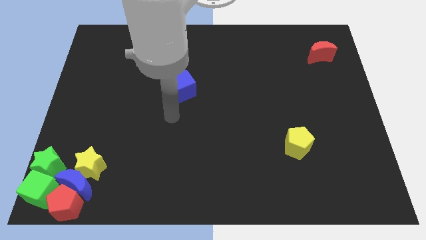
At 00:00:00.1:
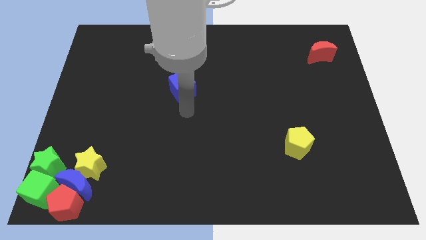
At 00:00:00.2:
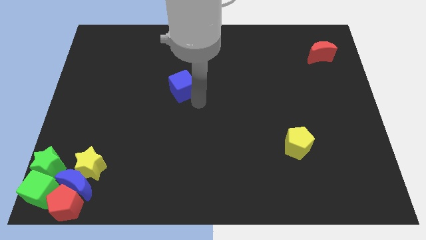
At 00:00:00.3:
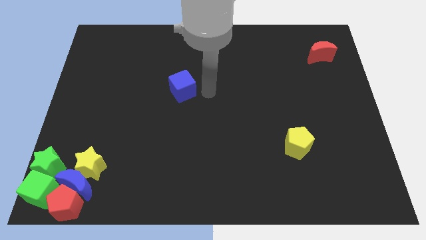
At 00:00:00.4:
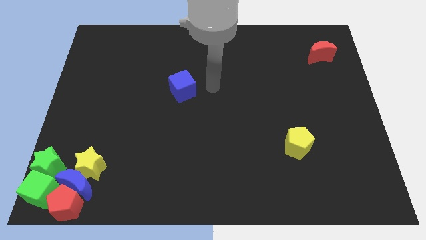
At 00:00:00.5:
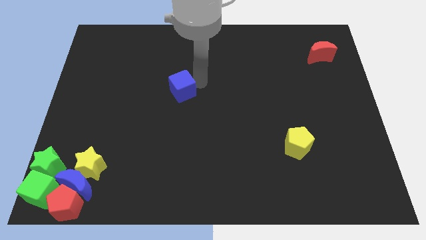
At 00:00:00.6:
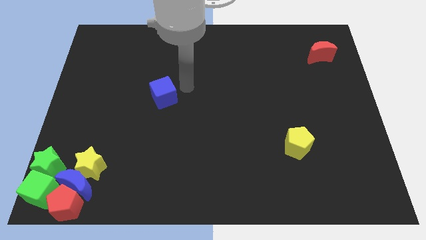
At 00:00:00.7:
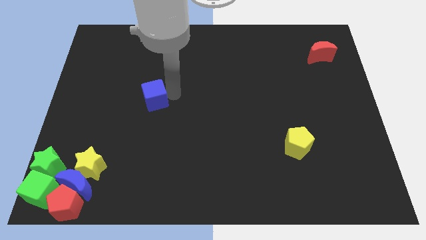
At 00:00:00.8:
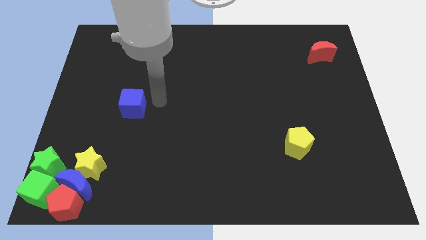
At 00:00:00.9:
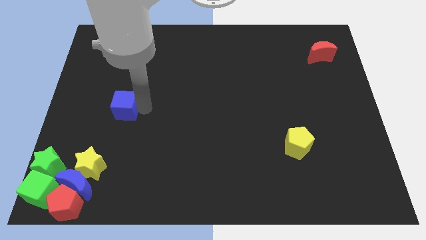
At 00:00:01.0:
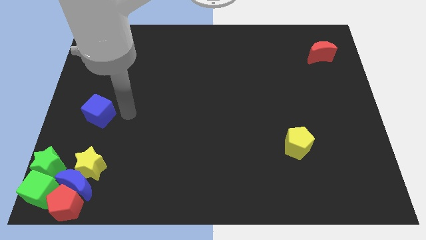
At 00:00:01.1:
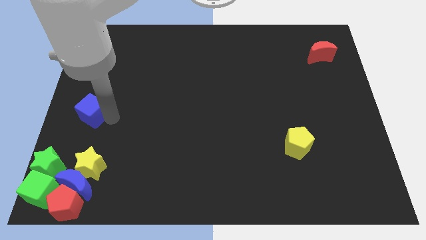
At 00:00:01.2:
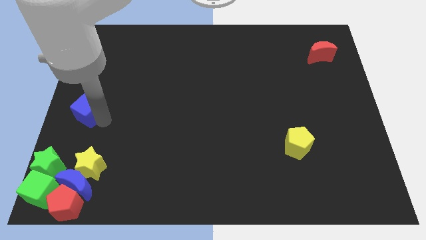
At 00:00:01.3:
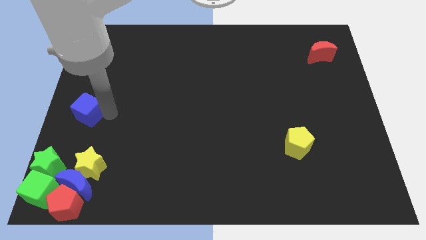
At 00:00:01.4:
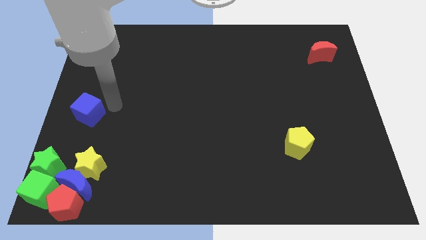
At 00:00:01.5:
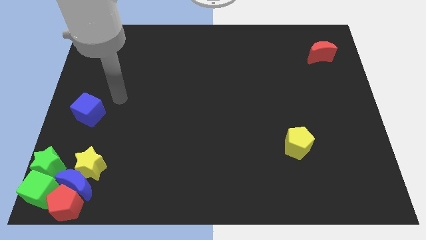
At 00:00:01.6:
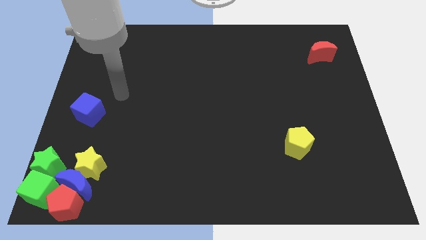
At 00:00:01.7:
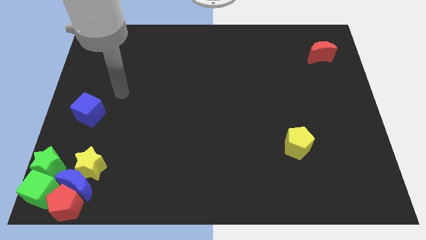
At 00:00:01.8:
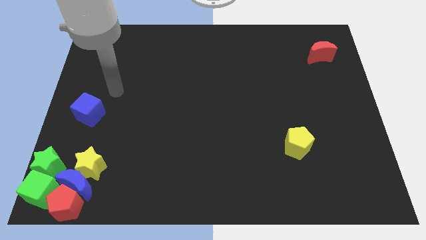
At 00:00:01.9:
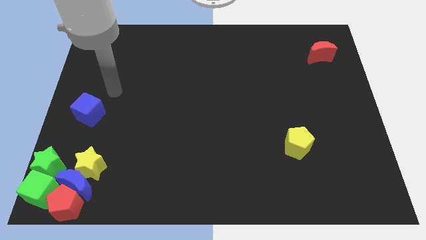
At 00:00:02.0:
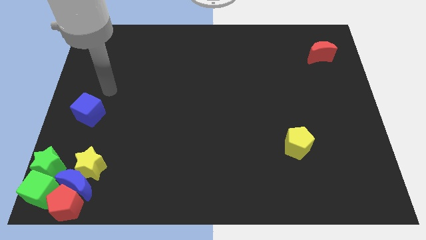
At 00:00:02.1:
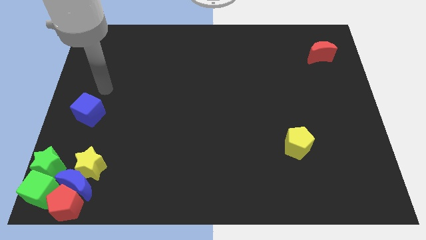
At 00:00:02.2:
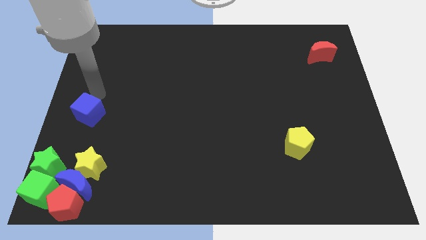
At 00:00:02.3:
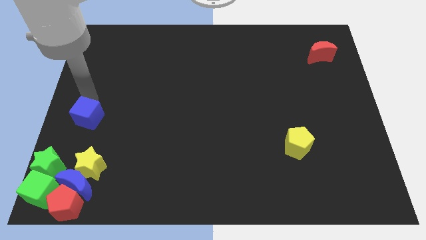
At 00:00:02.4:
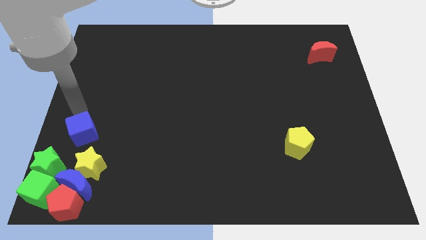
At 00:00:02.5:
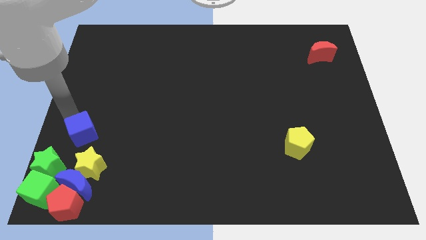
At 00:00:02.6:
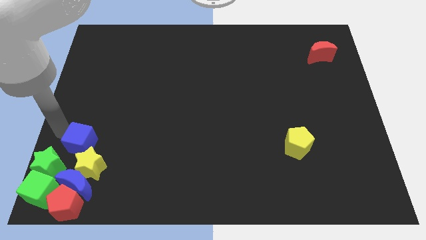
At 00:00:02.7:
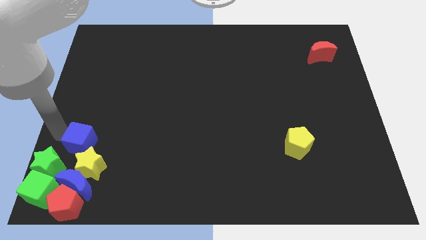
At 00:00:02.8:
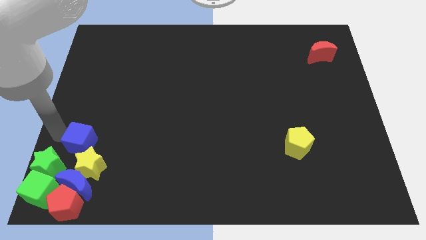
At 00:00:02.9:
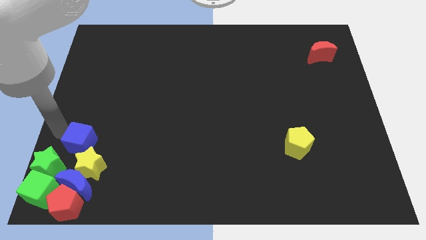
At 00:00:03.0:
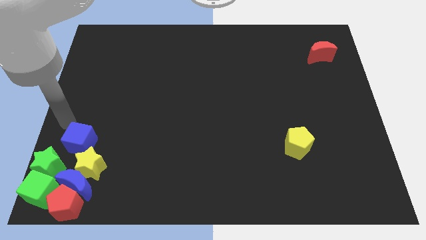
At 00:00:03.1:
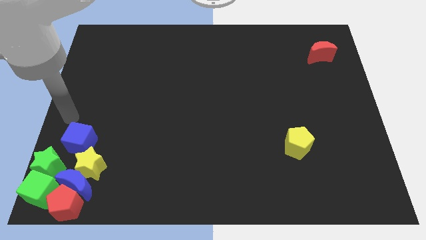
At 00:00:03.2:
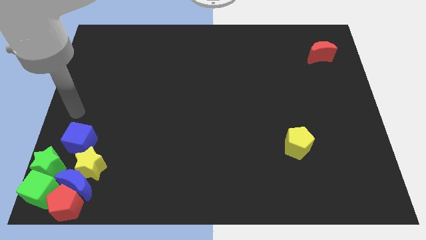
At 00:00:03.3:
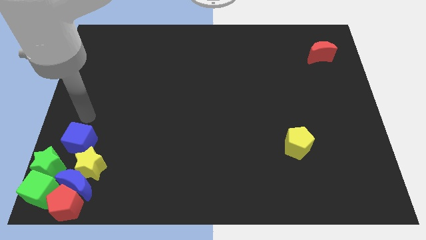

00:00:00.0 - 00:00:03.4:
place the blue cube diagonally at the top left of the yellow star

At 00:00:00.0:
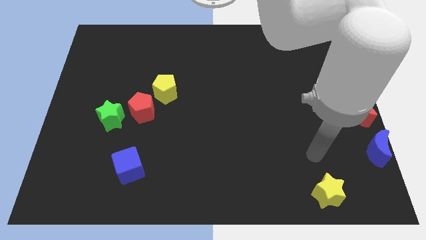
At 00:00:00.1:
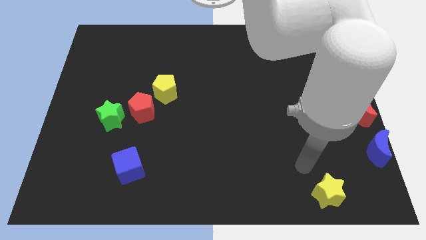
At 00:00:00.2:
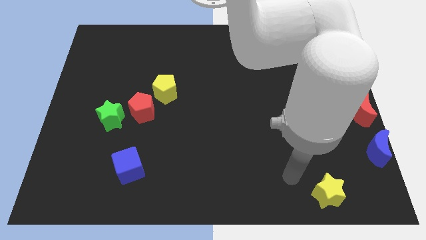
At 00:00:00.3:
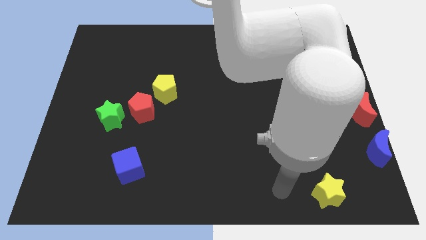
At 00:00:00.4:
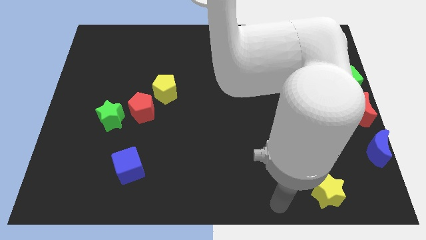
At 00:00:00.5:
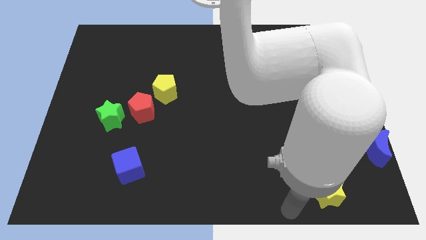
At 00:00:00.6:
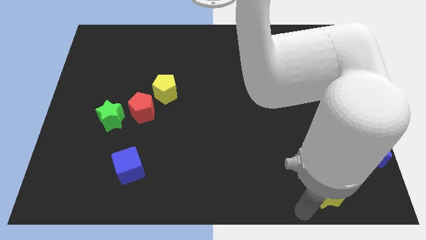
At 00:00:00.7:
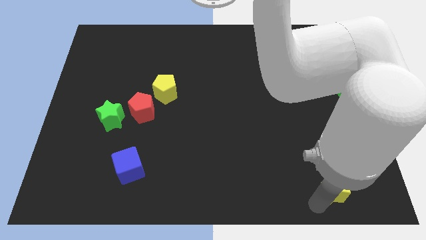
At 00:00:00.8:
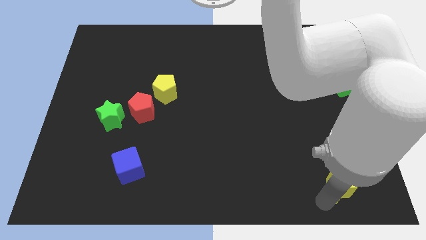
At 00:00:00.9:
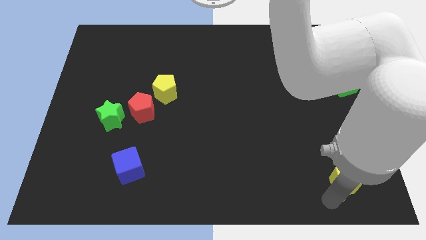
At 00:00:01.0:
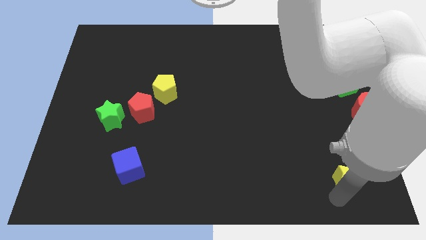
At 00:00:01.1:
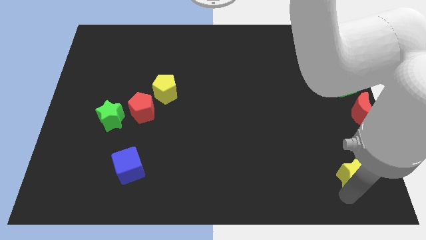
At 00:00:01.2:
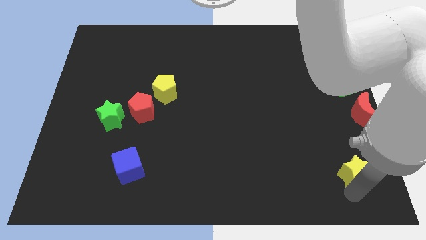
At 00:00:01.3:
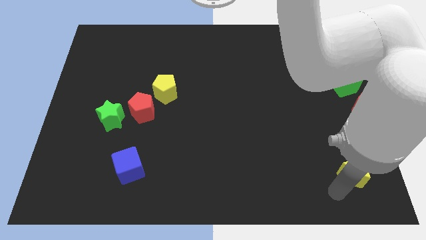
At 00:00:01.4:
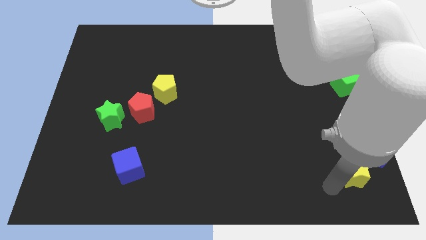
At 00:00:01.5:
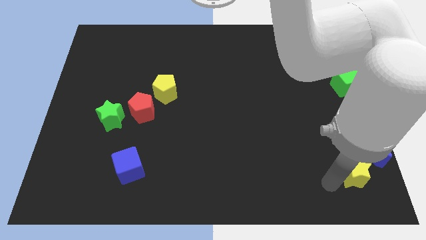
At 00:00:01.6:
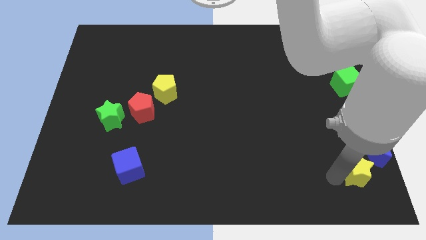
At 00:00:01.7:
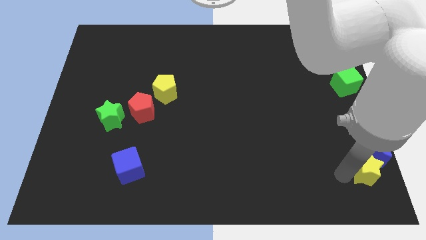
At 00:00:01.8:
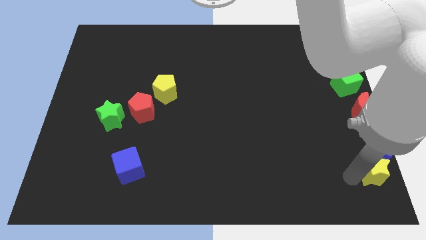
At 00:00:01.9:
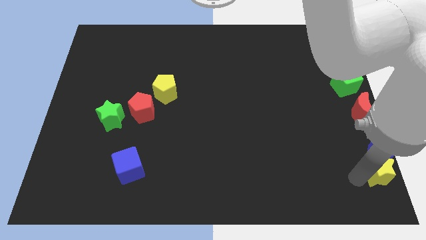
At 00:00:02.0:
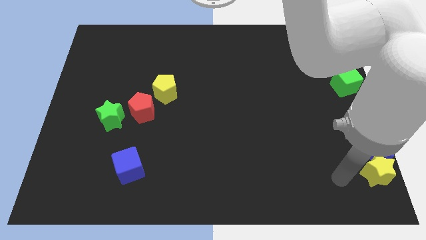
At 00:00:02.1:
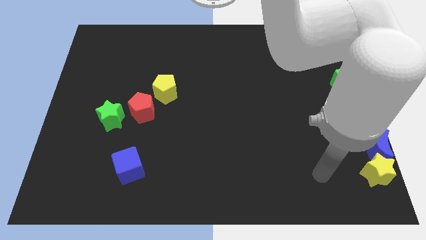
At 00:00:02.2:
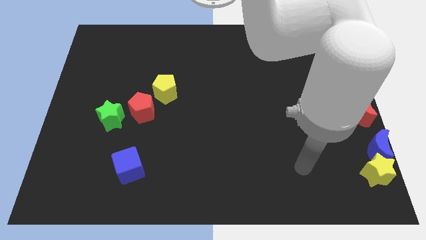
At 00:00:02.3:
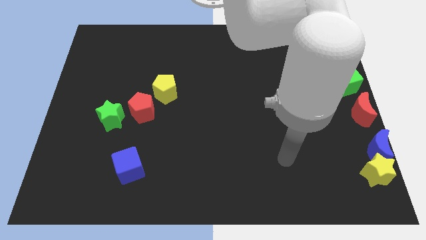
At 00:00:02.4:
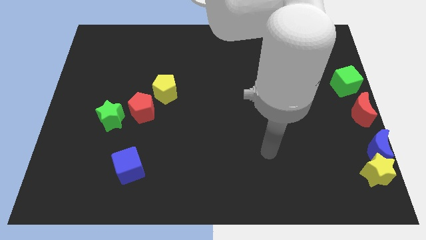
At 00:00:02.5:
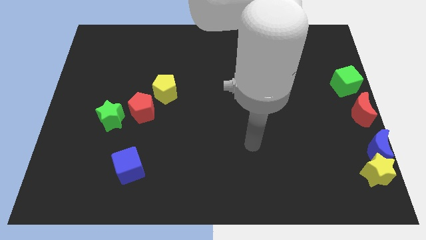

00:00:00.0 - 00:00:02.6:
push the yellow star to the bottom side of the blue moon

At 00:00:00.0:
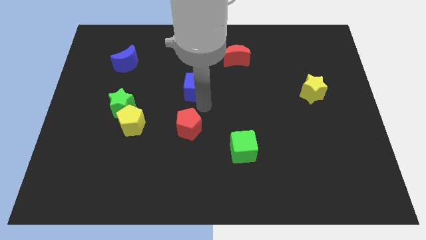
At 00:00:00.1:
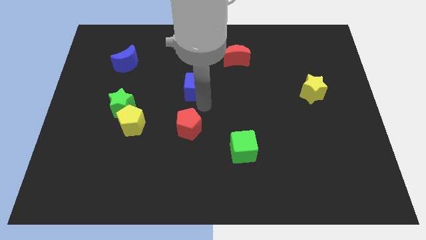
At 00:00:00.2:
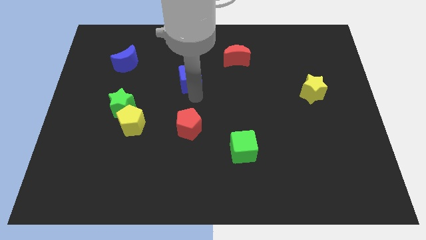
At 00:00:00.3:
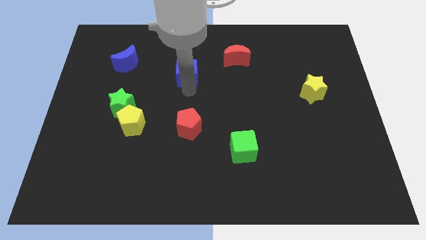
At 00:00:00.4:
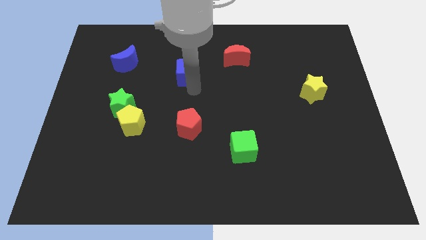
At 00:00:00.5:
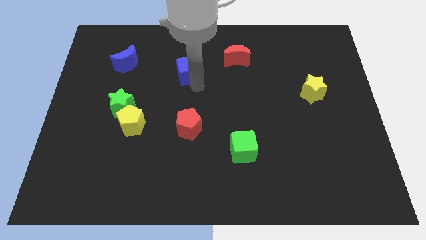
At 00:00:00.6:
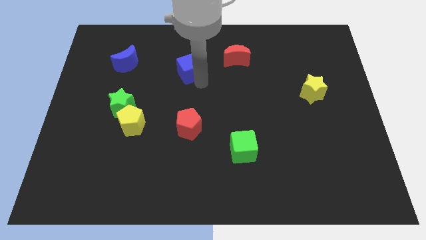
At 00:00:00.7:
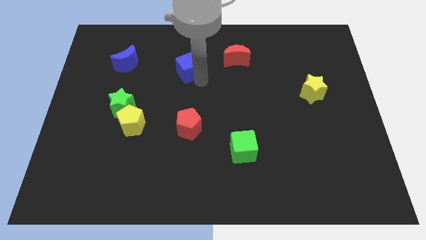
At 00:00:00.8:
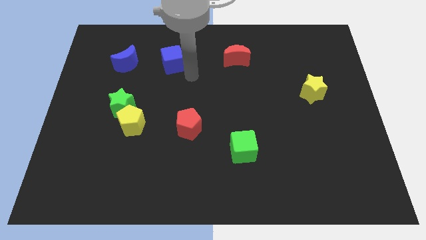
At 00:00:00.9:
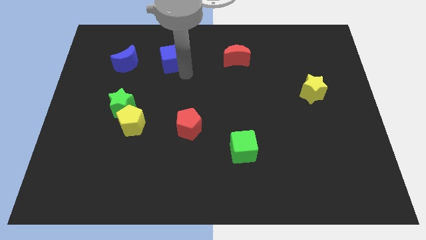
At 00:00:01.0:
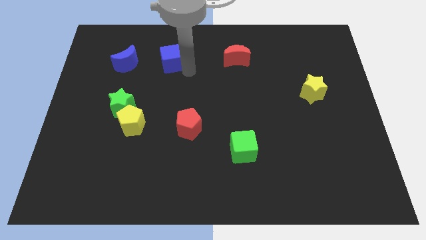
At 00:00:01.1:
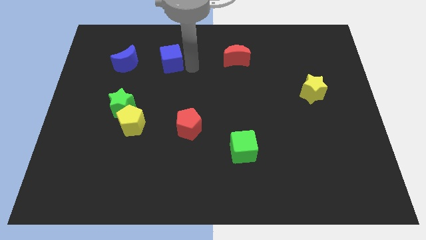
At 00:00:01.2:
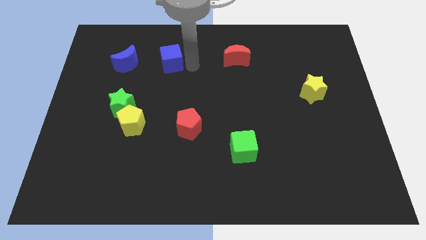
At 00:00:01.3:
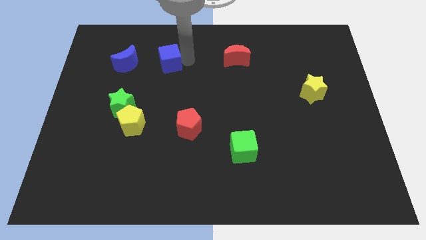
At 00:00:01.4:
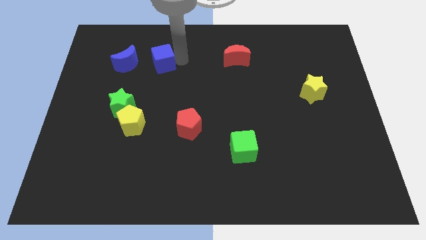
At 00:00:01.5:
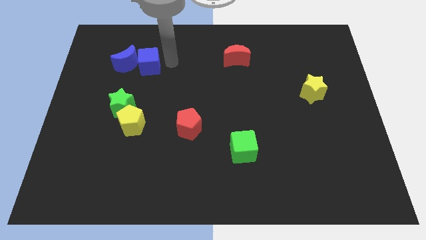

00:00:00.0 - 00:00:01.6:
move the blue cube close to the blue moon

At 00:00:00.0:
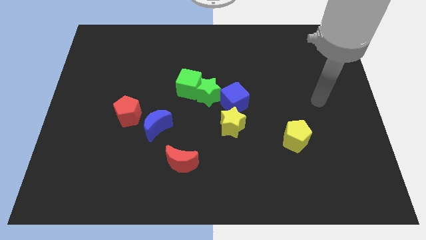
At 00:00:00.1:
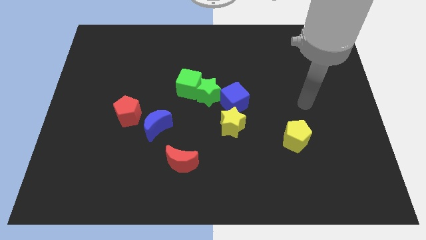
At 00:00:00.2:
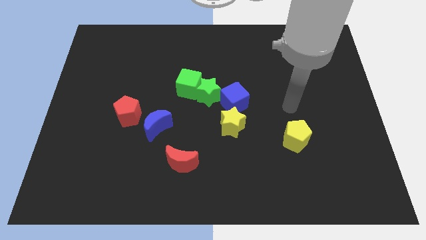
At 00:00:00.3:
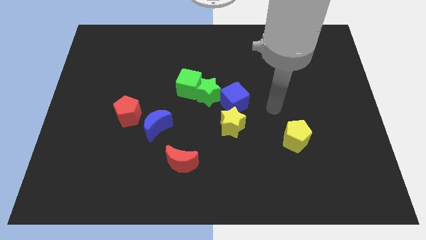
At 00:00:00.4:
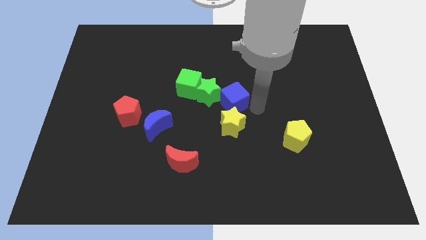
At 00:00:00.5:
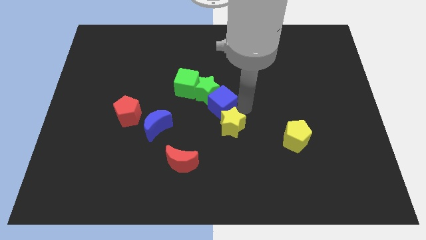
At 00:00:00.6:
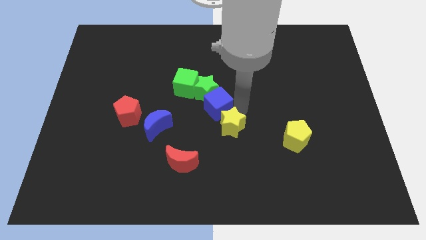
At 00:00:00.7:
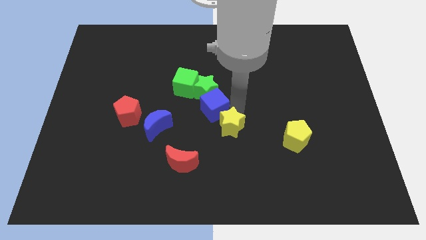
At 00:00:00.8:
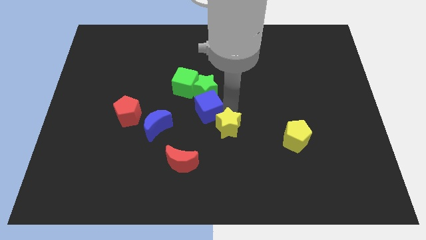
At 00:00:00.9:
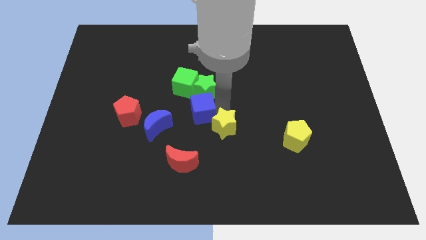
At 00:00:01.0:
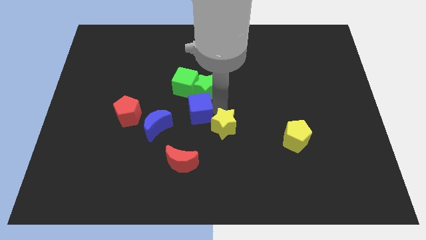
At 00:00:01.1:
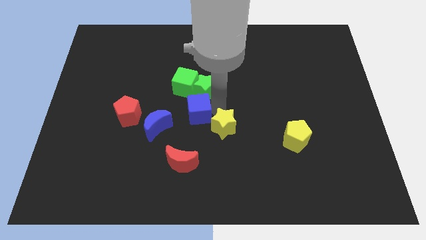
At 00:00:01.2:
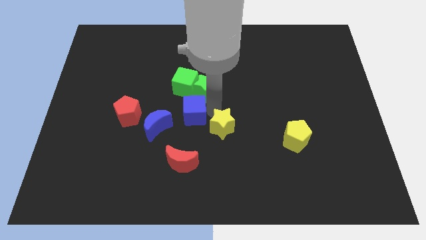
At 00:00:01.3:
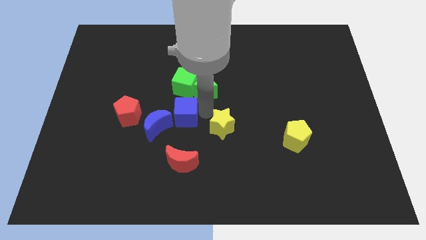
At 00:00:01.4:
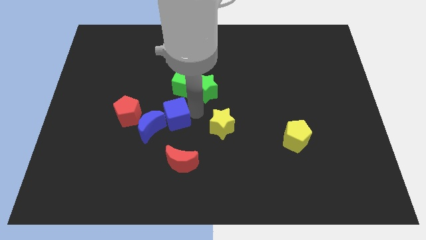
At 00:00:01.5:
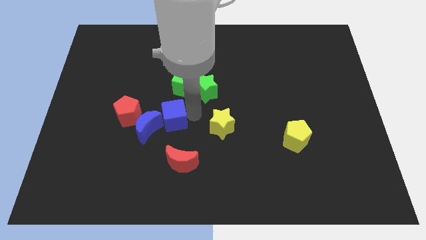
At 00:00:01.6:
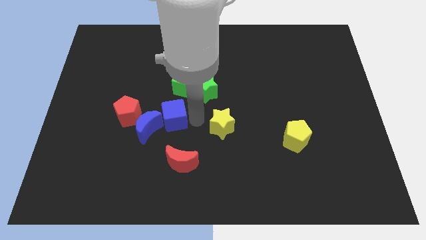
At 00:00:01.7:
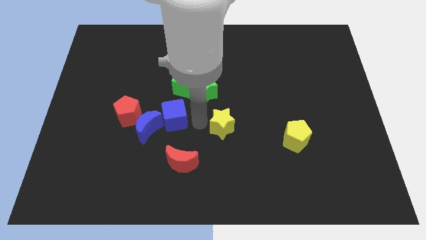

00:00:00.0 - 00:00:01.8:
place blue cube beside the blue crescent
